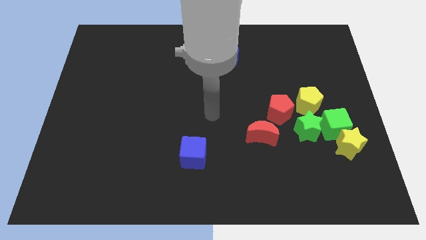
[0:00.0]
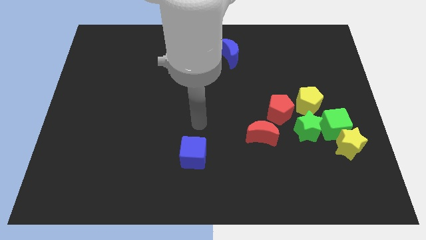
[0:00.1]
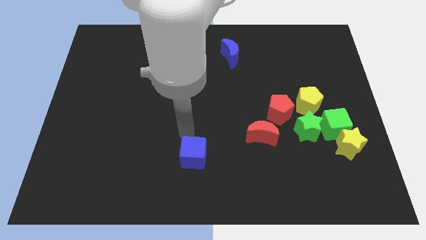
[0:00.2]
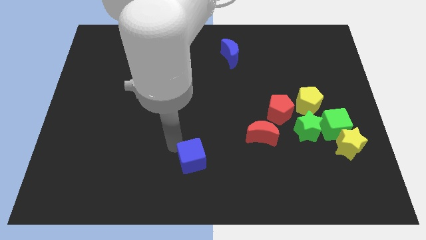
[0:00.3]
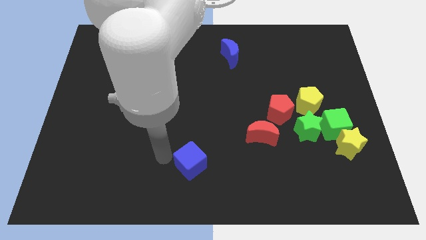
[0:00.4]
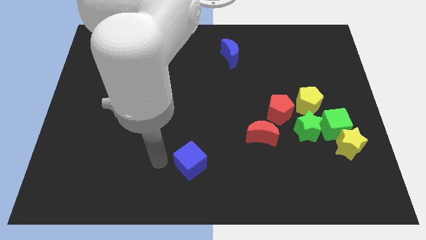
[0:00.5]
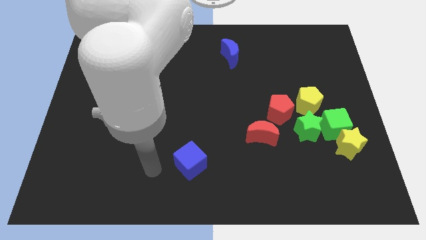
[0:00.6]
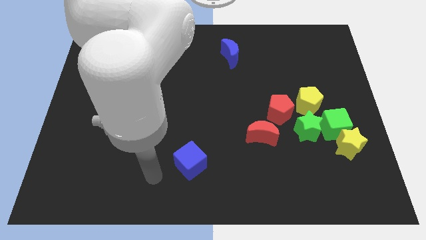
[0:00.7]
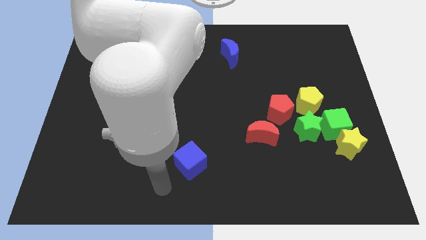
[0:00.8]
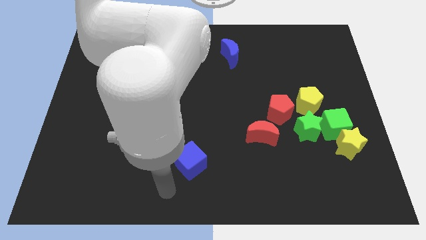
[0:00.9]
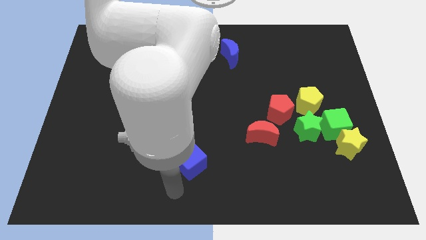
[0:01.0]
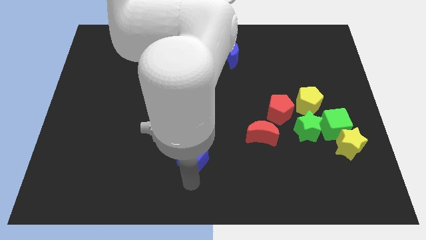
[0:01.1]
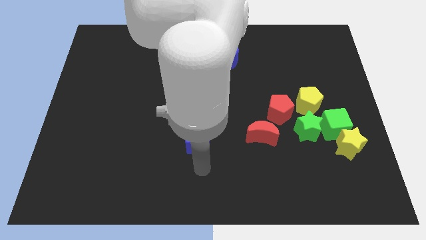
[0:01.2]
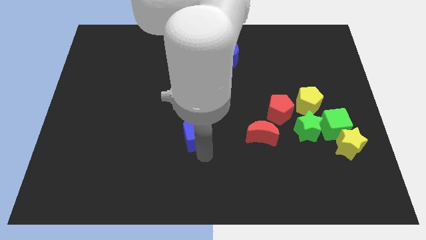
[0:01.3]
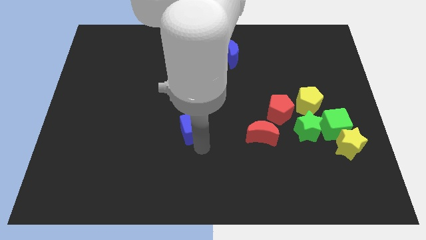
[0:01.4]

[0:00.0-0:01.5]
push the blue cube towards the centre

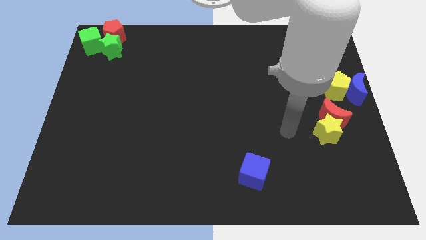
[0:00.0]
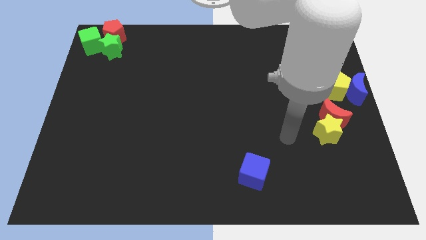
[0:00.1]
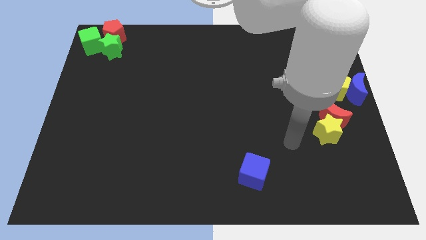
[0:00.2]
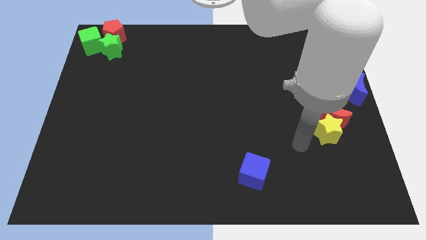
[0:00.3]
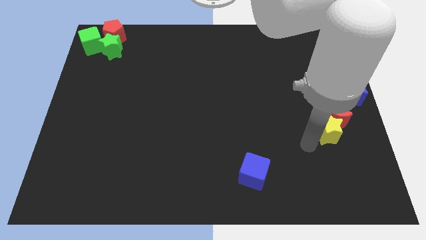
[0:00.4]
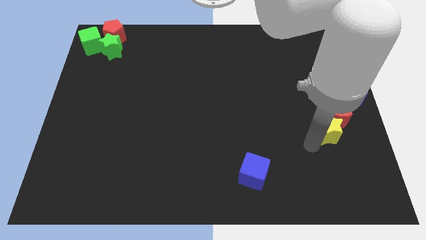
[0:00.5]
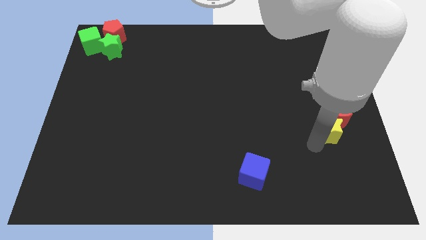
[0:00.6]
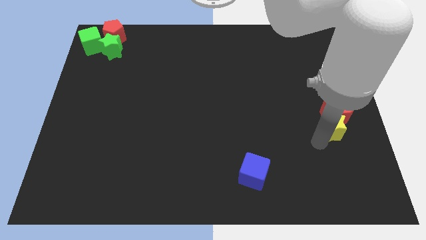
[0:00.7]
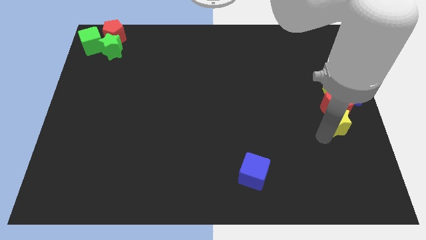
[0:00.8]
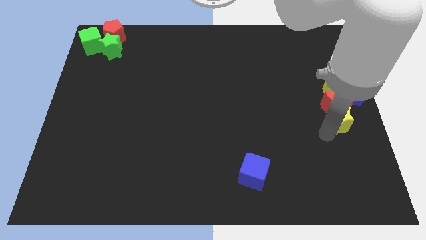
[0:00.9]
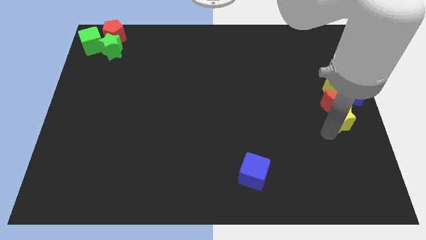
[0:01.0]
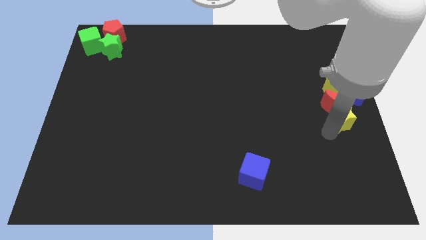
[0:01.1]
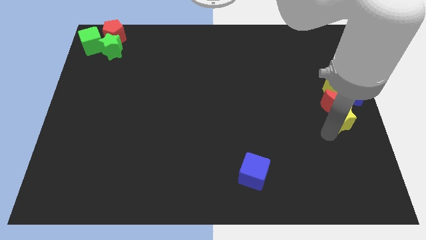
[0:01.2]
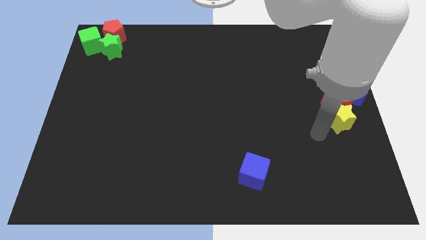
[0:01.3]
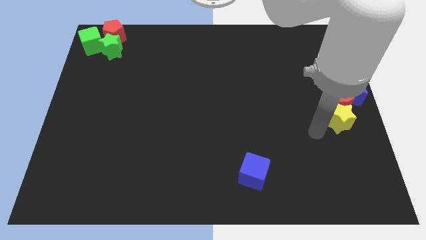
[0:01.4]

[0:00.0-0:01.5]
push the yellow star and red moon into the yellow pentagon

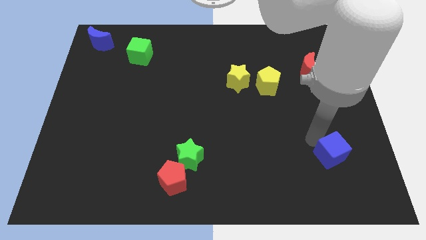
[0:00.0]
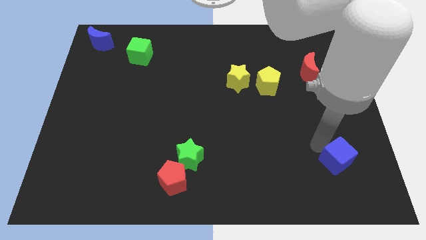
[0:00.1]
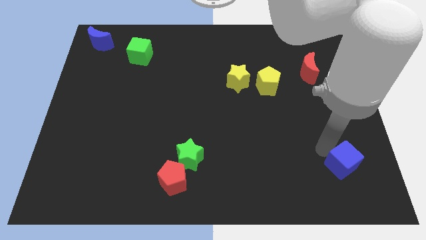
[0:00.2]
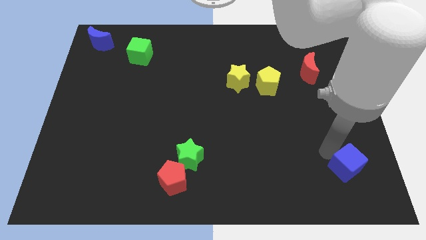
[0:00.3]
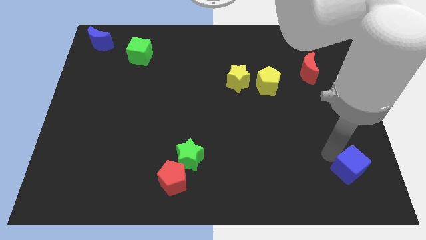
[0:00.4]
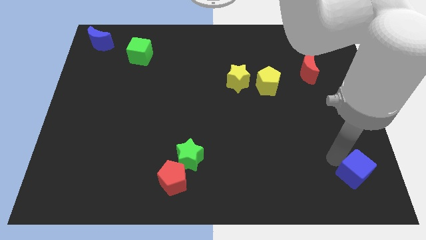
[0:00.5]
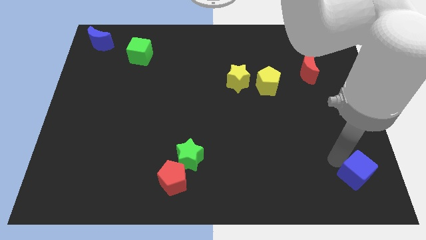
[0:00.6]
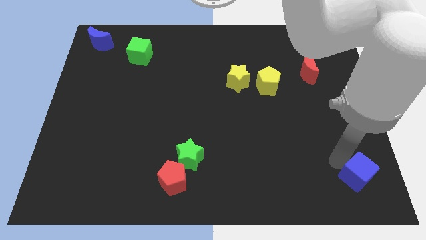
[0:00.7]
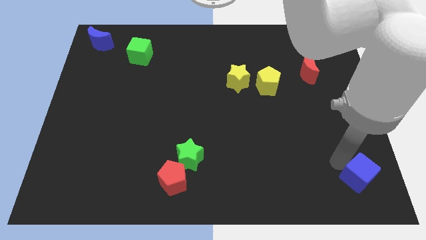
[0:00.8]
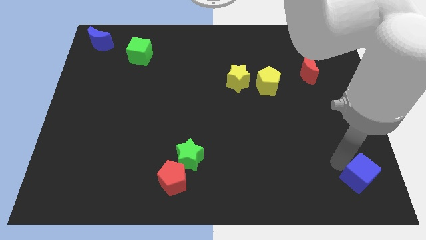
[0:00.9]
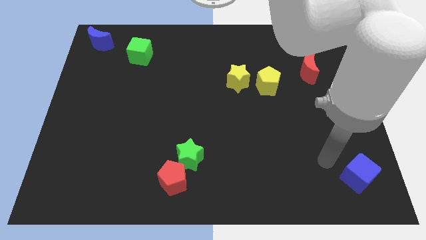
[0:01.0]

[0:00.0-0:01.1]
slide blue cube towards bottom right

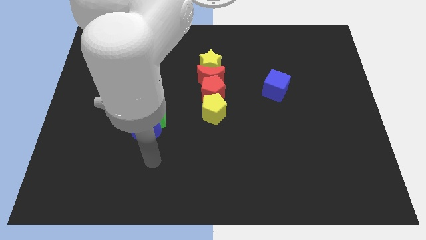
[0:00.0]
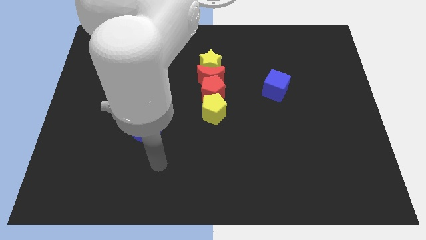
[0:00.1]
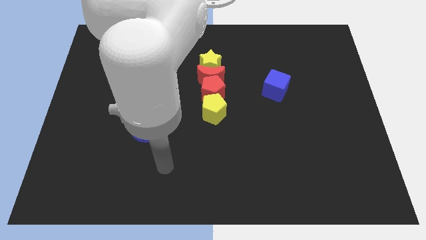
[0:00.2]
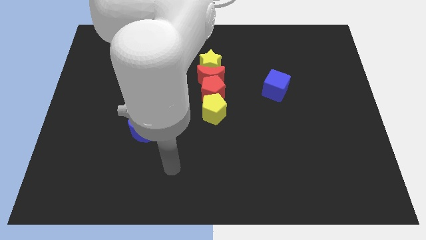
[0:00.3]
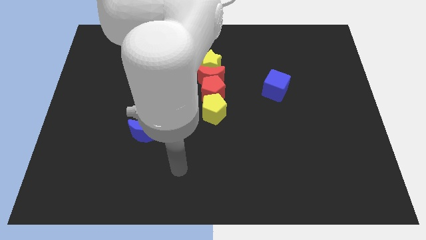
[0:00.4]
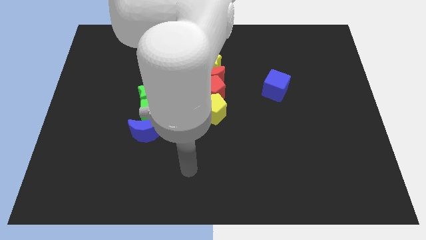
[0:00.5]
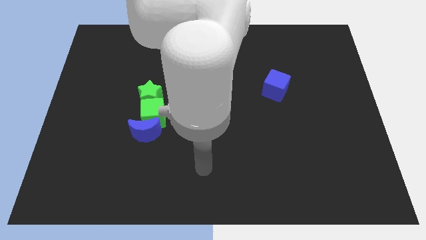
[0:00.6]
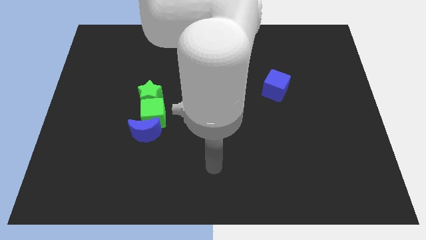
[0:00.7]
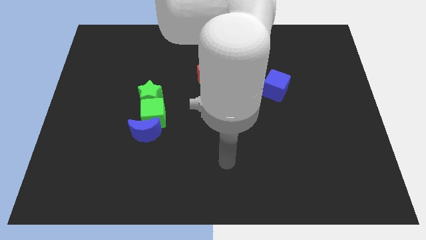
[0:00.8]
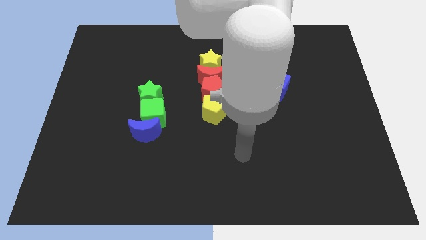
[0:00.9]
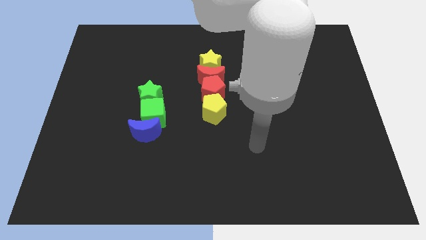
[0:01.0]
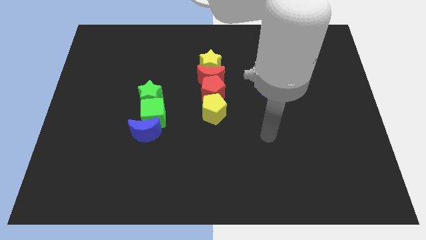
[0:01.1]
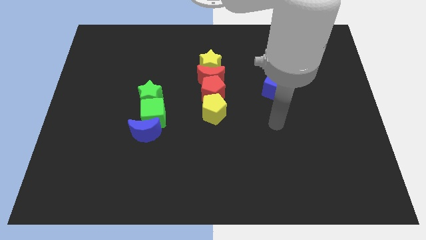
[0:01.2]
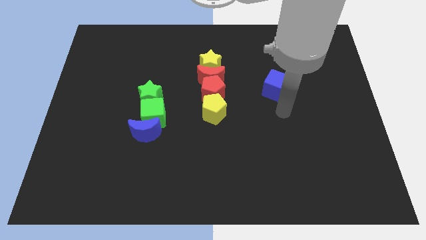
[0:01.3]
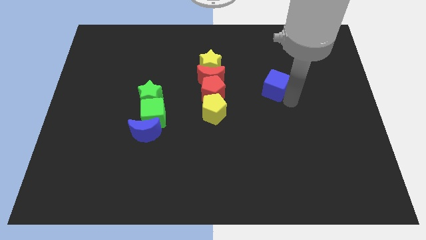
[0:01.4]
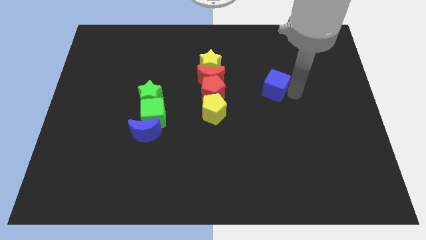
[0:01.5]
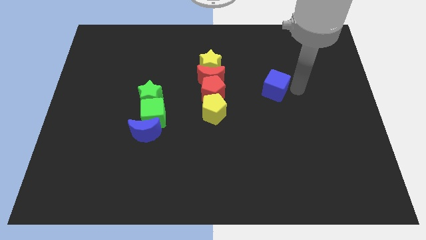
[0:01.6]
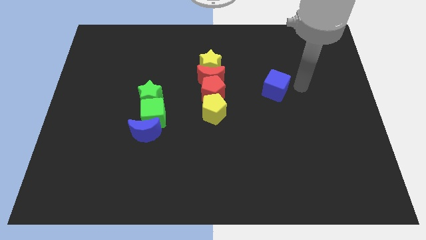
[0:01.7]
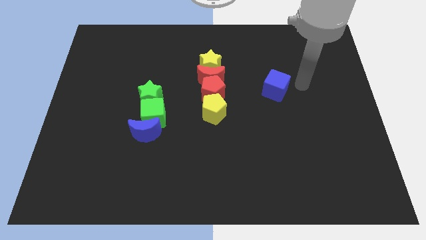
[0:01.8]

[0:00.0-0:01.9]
move the arm to the right of the blue cube

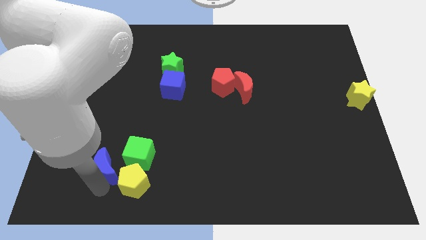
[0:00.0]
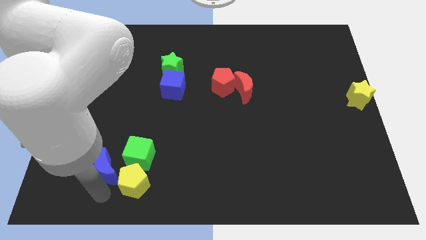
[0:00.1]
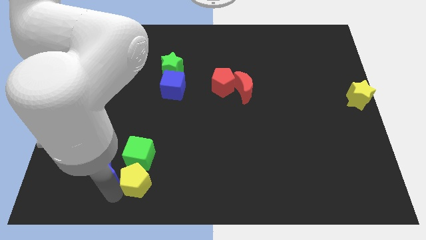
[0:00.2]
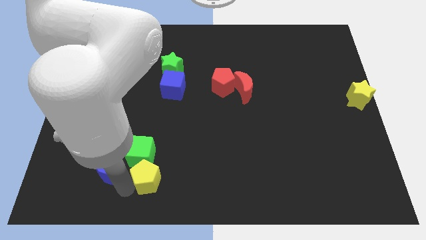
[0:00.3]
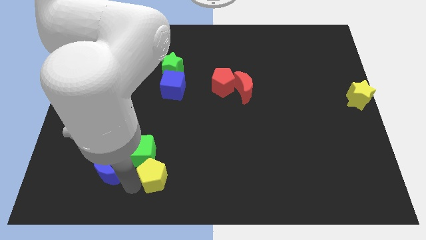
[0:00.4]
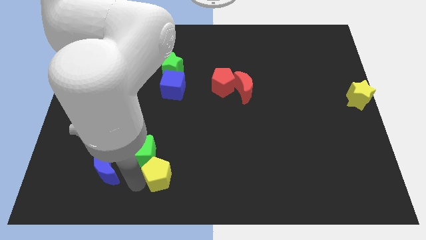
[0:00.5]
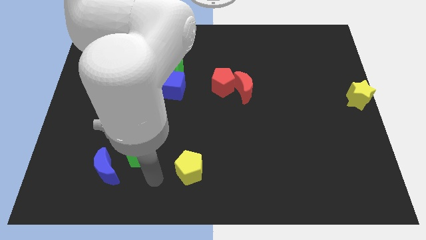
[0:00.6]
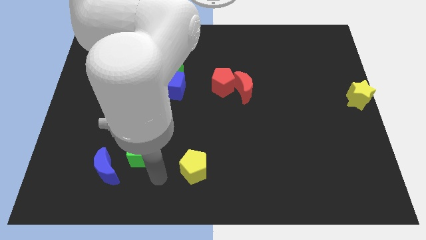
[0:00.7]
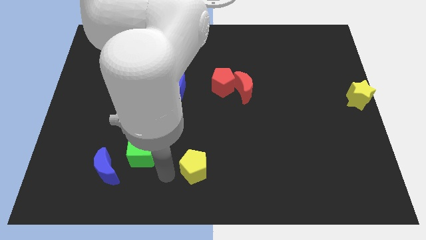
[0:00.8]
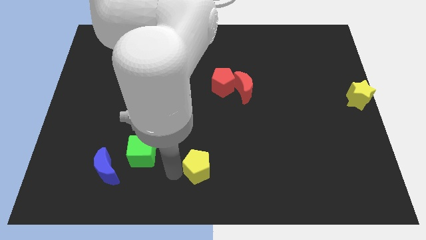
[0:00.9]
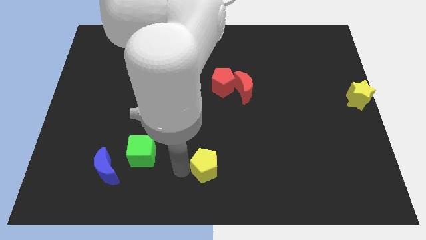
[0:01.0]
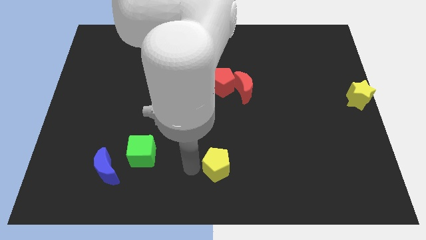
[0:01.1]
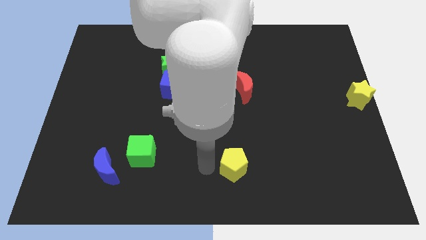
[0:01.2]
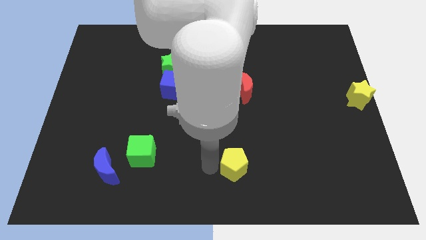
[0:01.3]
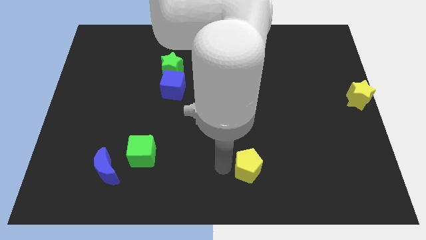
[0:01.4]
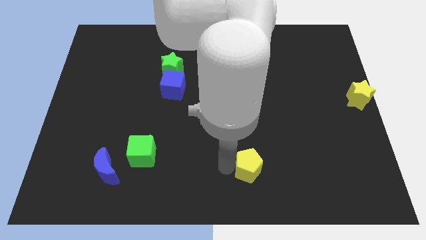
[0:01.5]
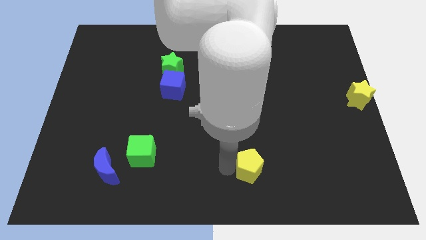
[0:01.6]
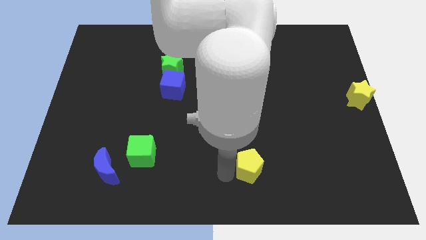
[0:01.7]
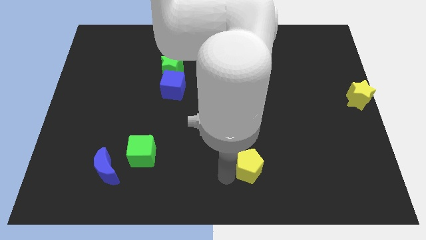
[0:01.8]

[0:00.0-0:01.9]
place the yellow pentagon towards the bottom center of the board

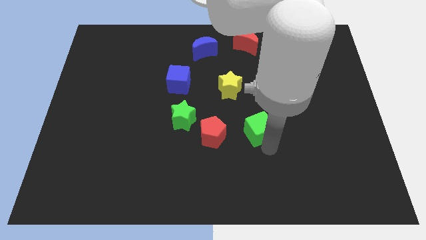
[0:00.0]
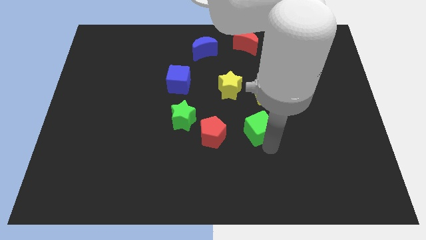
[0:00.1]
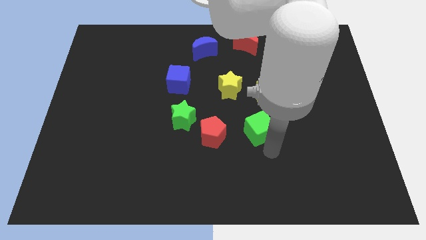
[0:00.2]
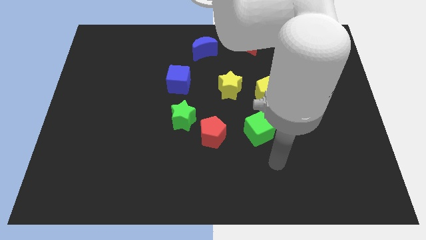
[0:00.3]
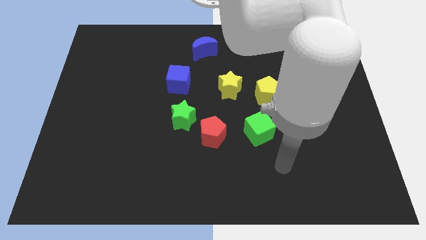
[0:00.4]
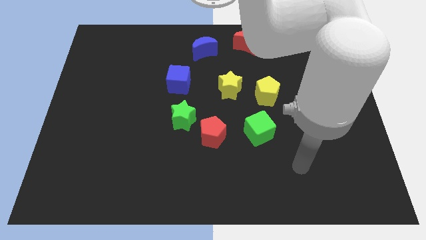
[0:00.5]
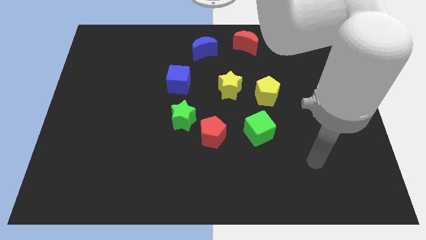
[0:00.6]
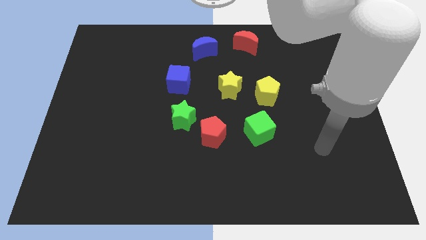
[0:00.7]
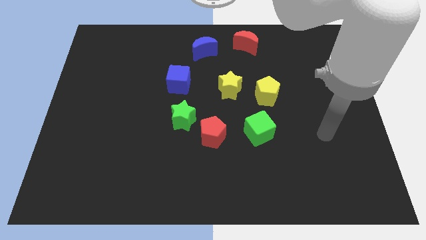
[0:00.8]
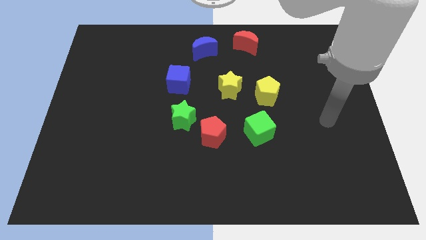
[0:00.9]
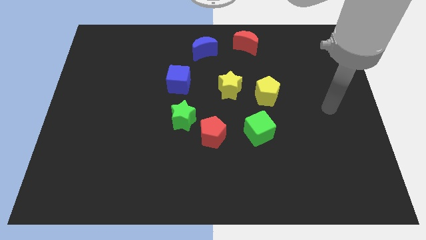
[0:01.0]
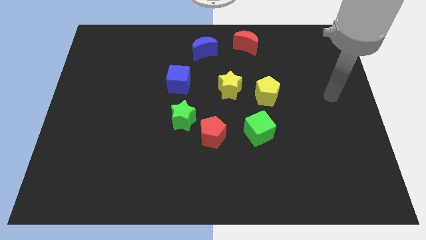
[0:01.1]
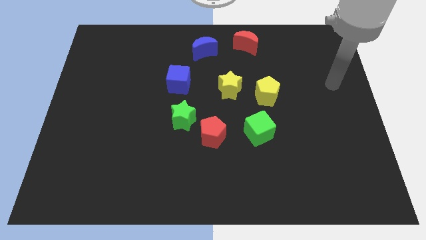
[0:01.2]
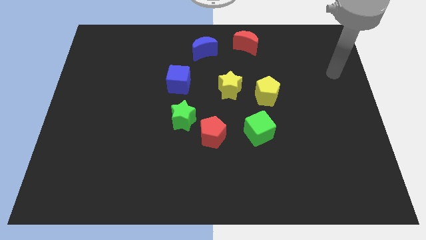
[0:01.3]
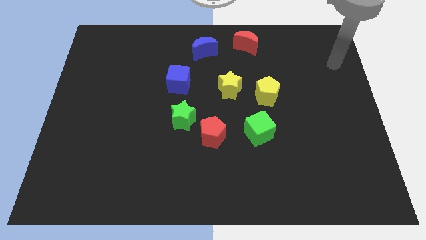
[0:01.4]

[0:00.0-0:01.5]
move your arm towards the top right corner of the board
